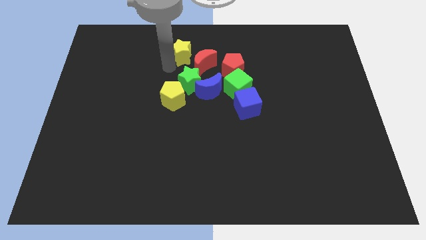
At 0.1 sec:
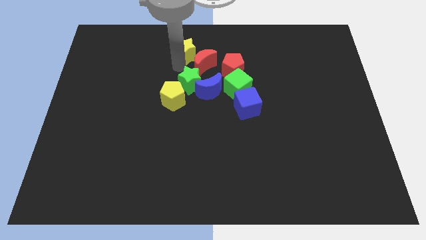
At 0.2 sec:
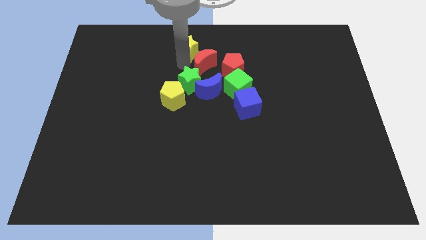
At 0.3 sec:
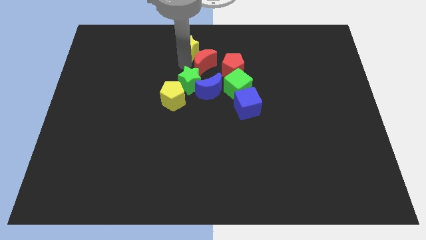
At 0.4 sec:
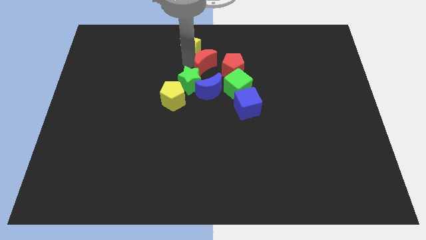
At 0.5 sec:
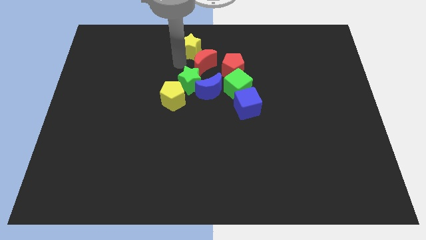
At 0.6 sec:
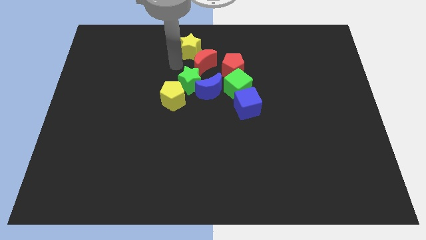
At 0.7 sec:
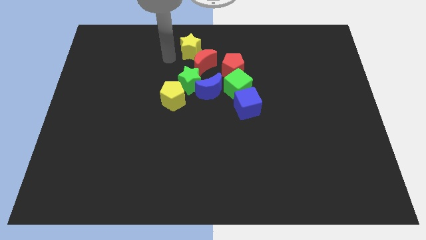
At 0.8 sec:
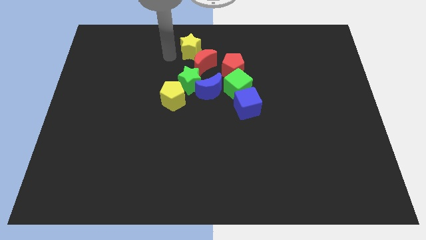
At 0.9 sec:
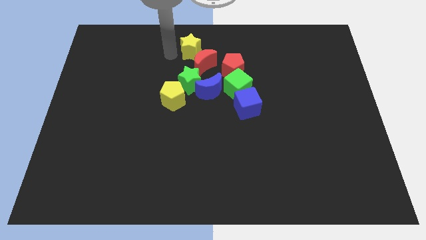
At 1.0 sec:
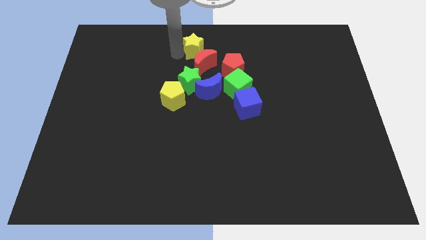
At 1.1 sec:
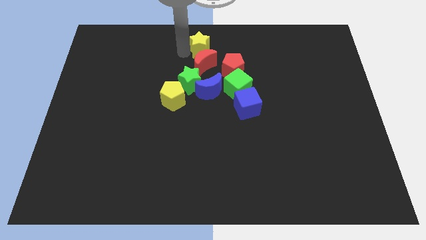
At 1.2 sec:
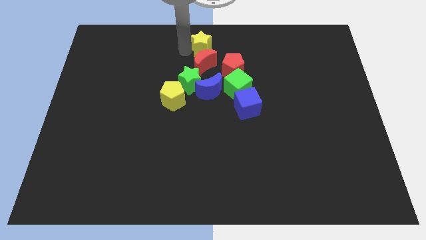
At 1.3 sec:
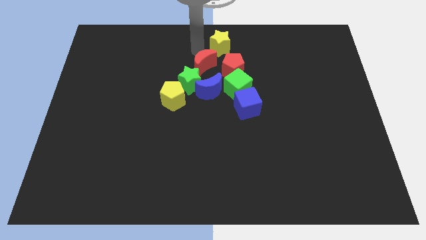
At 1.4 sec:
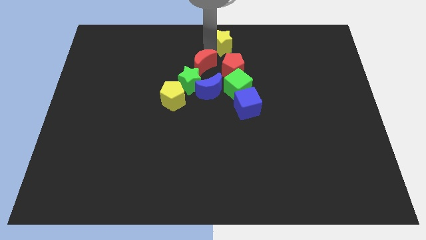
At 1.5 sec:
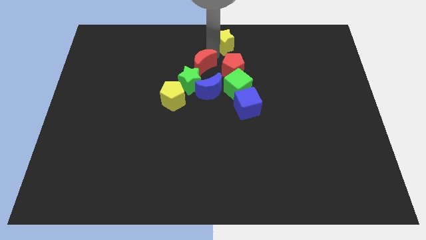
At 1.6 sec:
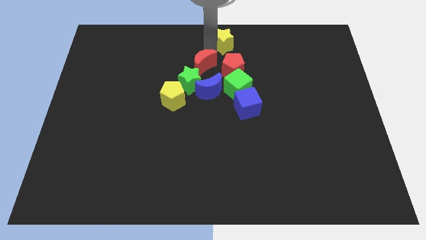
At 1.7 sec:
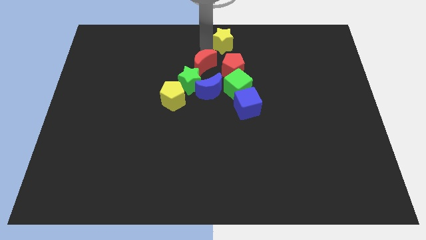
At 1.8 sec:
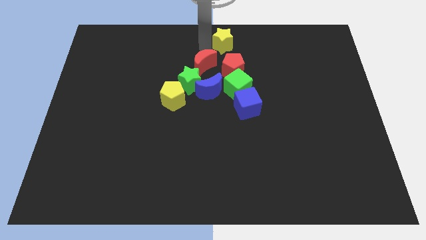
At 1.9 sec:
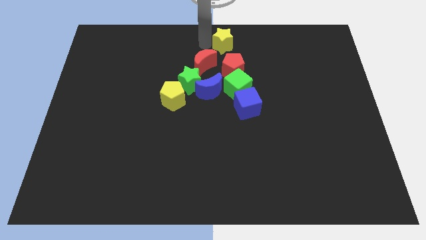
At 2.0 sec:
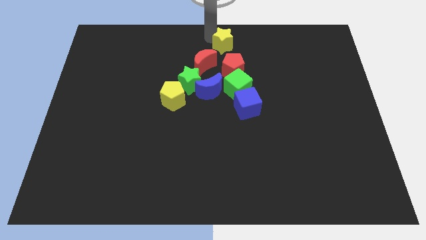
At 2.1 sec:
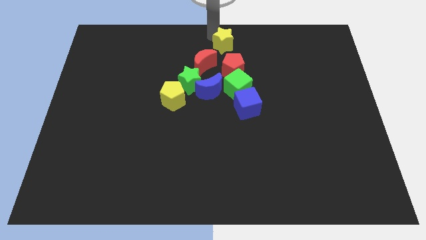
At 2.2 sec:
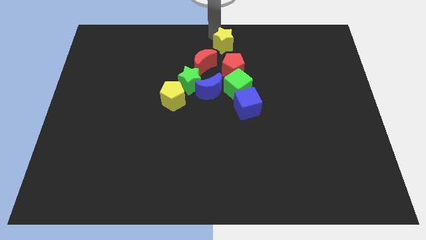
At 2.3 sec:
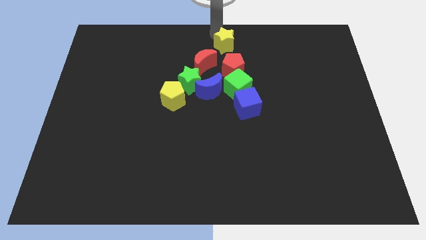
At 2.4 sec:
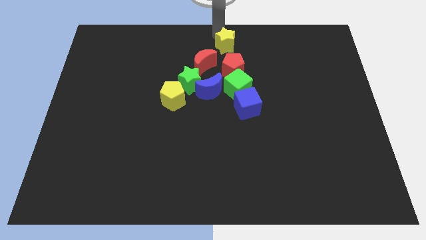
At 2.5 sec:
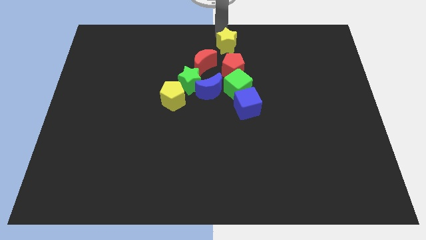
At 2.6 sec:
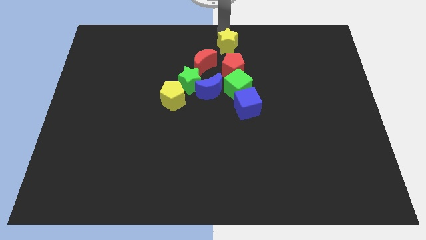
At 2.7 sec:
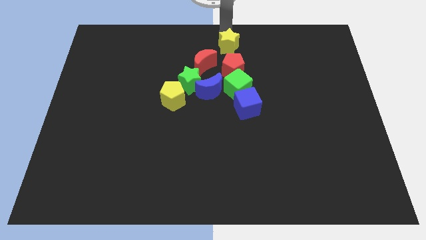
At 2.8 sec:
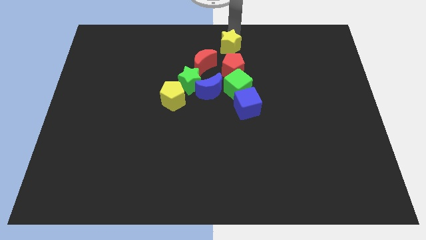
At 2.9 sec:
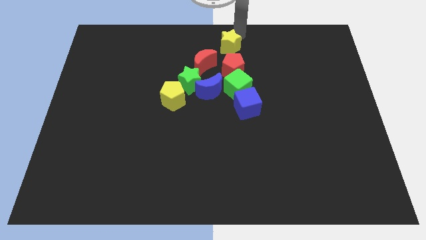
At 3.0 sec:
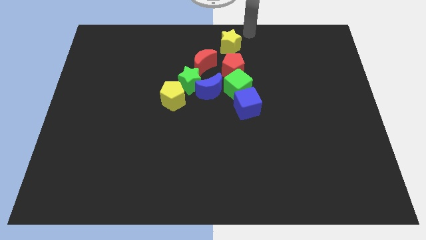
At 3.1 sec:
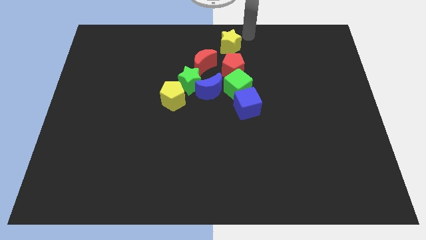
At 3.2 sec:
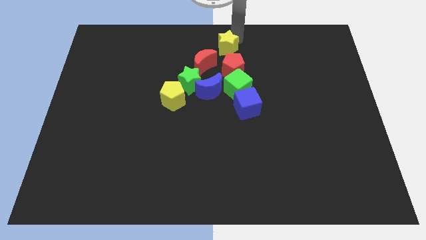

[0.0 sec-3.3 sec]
move the yellow star to the top of the red pentagon

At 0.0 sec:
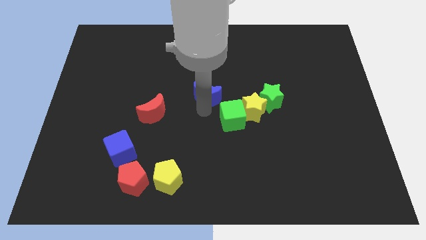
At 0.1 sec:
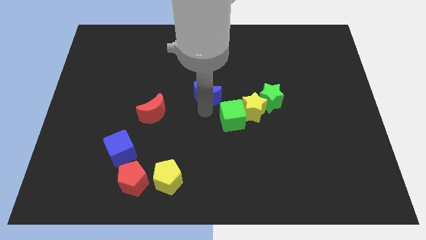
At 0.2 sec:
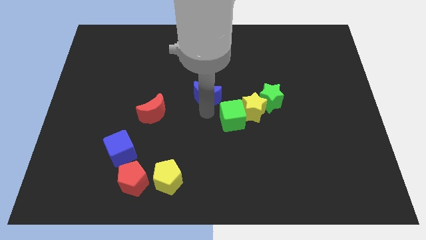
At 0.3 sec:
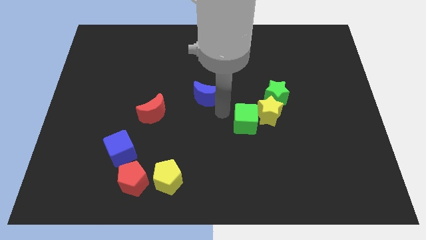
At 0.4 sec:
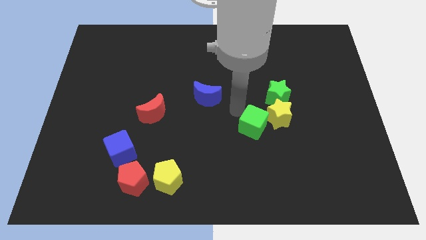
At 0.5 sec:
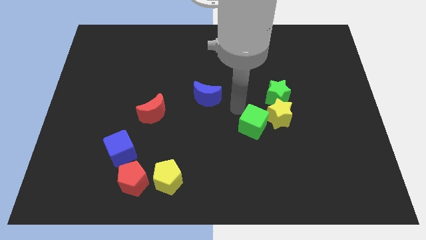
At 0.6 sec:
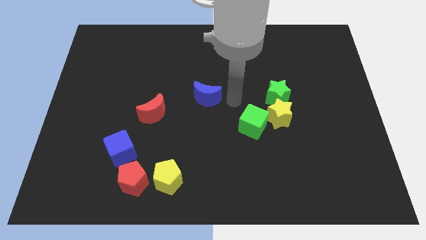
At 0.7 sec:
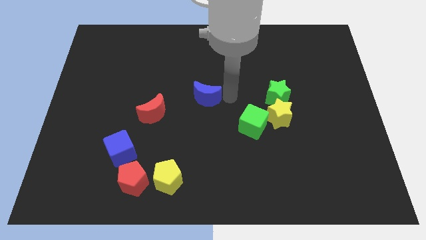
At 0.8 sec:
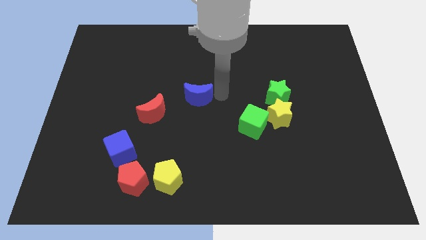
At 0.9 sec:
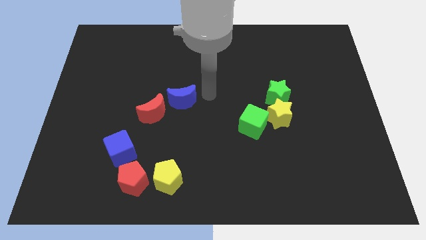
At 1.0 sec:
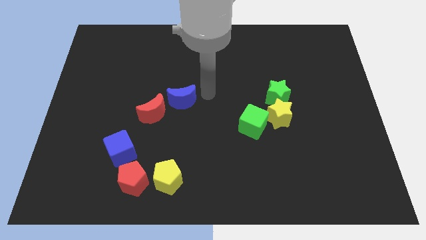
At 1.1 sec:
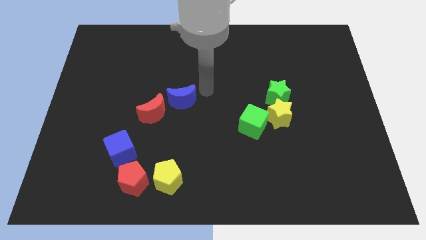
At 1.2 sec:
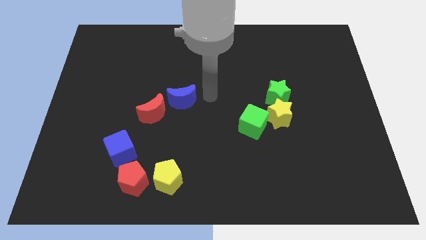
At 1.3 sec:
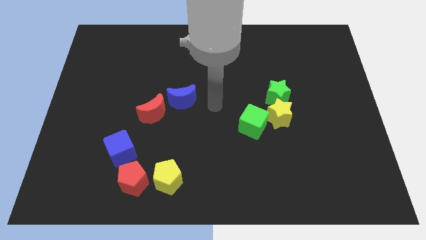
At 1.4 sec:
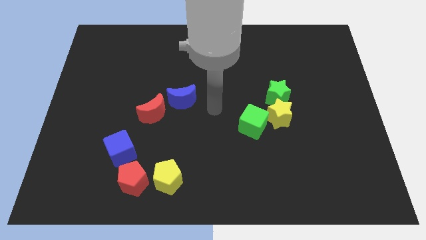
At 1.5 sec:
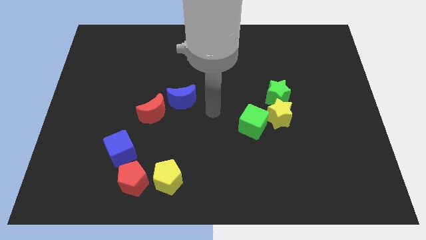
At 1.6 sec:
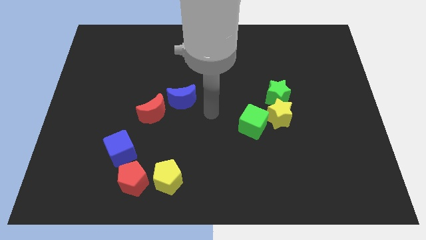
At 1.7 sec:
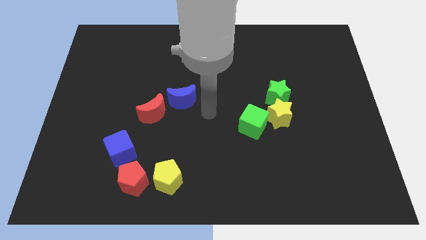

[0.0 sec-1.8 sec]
push blue crescent apart from green cube green star and yellow star

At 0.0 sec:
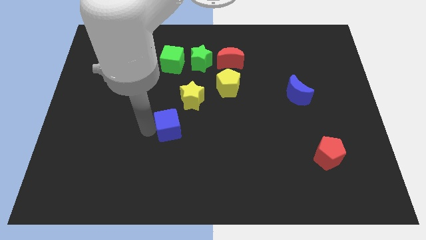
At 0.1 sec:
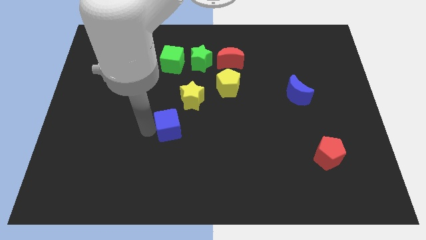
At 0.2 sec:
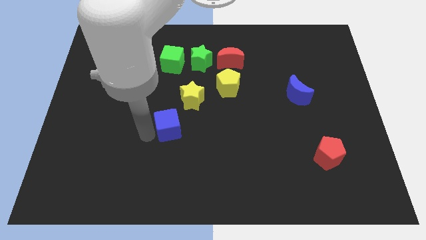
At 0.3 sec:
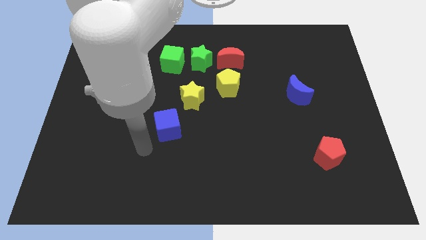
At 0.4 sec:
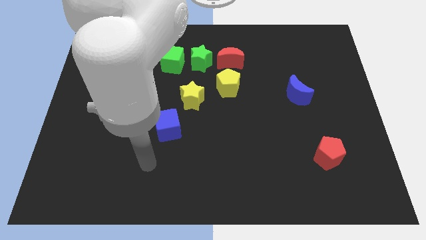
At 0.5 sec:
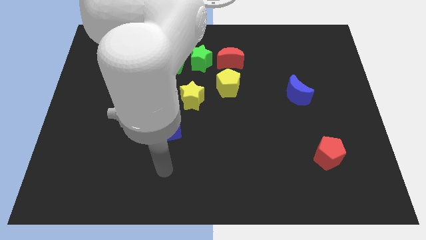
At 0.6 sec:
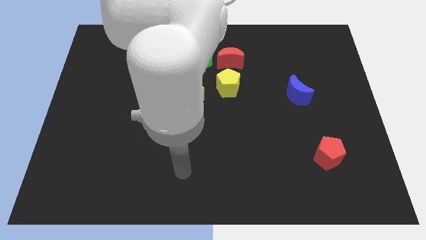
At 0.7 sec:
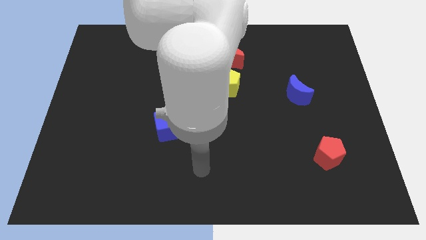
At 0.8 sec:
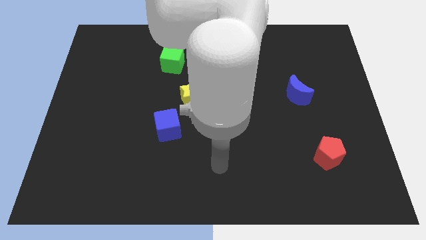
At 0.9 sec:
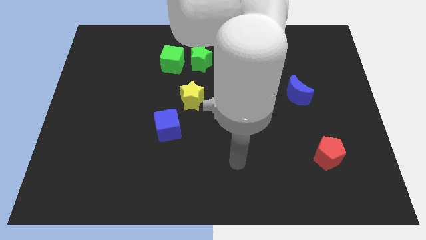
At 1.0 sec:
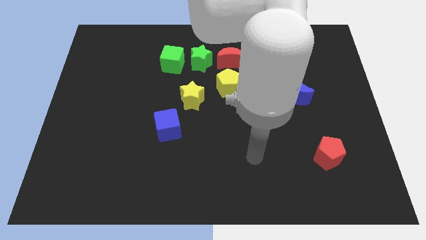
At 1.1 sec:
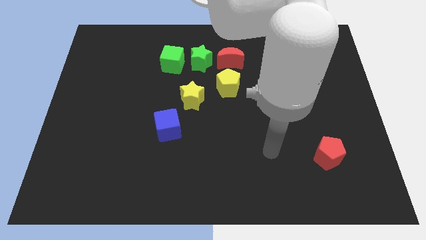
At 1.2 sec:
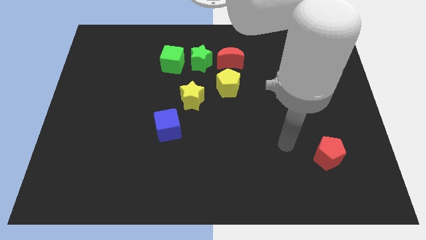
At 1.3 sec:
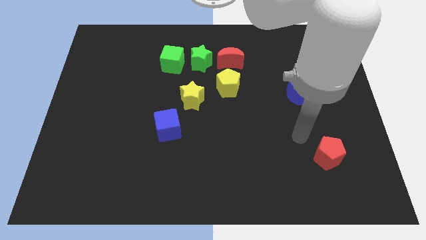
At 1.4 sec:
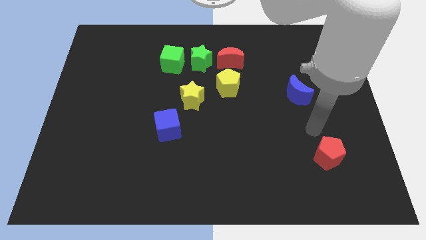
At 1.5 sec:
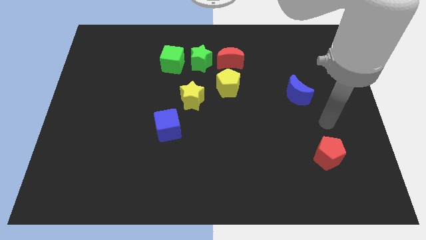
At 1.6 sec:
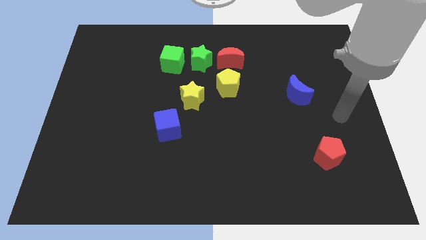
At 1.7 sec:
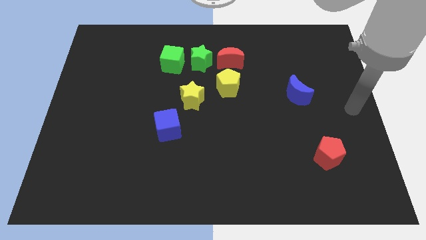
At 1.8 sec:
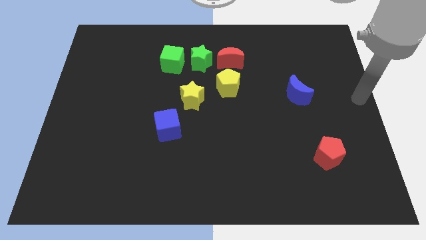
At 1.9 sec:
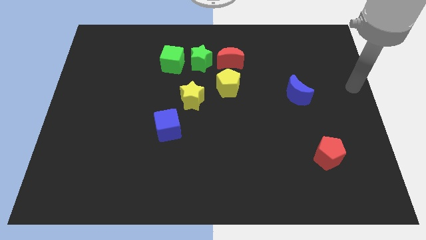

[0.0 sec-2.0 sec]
push your arm towards the right middle center of the board

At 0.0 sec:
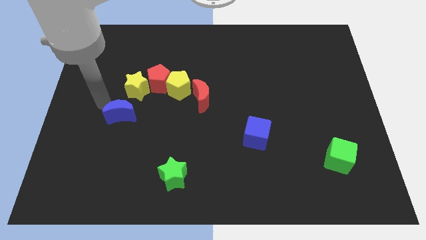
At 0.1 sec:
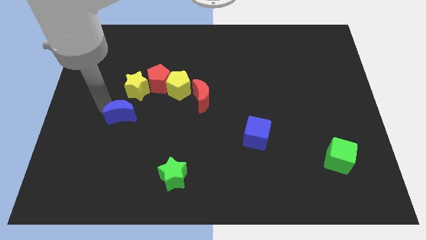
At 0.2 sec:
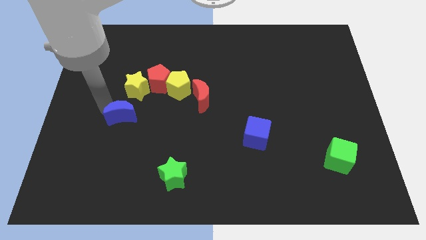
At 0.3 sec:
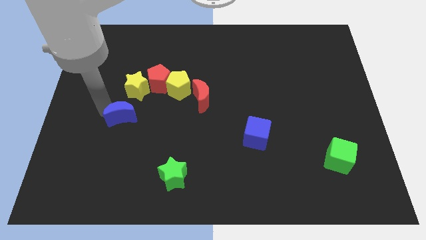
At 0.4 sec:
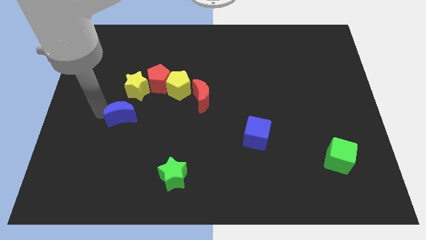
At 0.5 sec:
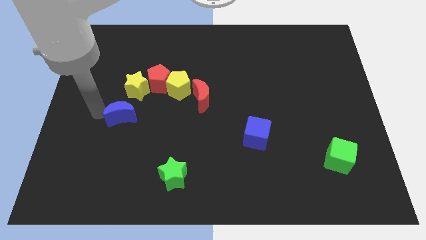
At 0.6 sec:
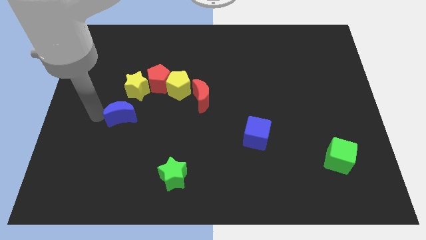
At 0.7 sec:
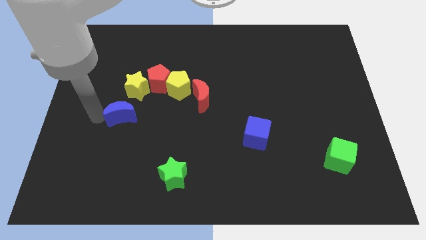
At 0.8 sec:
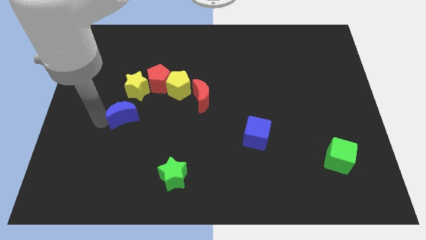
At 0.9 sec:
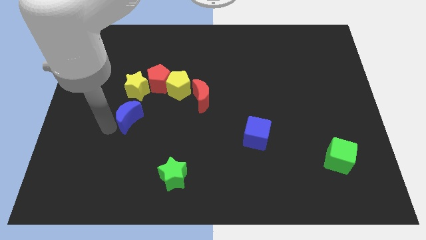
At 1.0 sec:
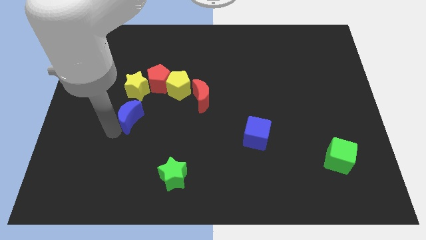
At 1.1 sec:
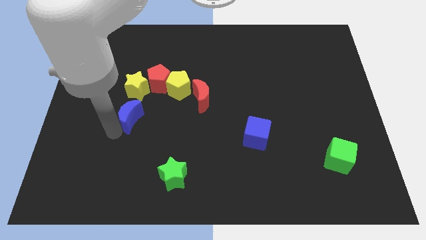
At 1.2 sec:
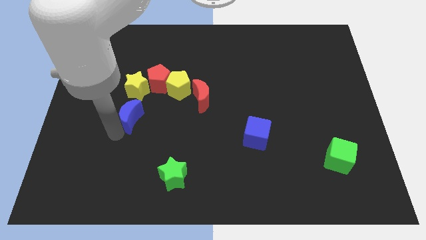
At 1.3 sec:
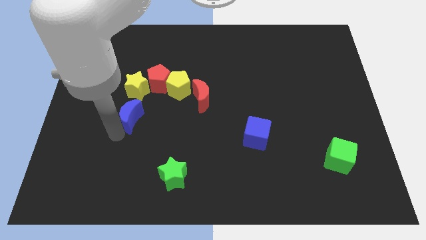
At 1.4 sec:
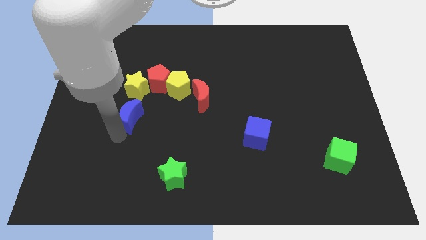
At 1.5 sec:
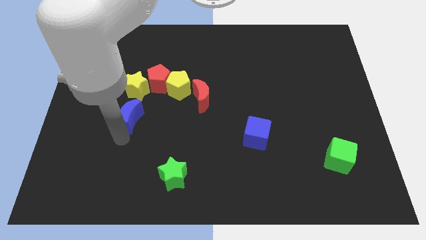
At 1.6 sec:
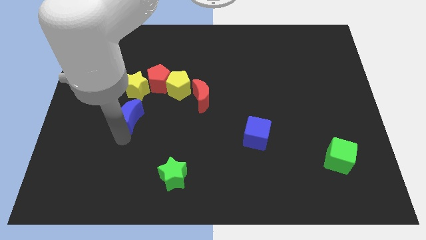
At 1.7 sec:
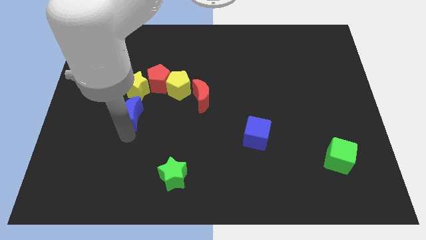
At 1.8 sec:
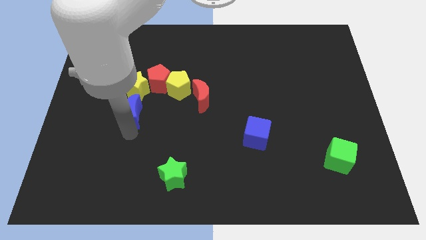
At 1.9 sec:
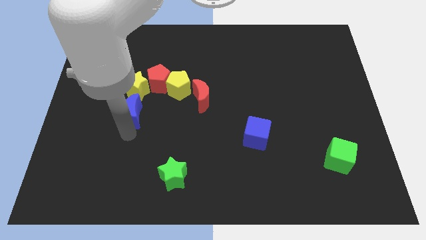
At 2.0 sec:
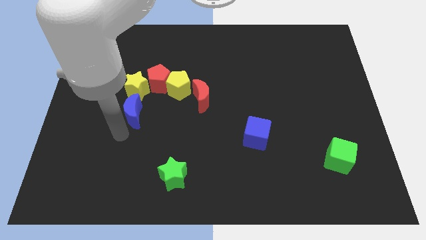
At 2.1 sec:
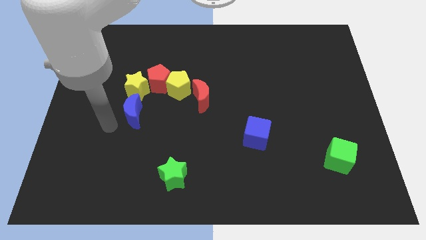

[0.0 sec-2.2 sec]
move blue moon into yellow star
